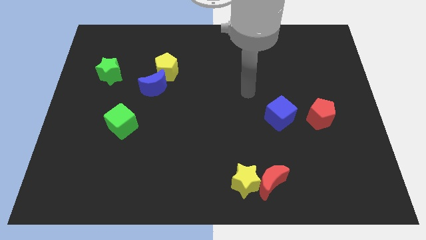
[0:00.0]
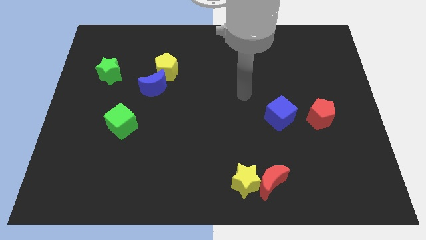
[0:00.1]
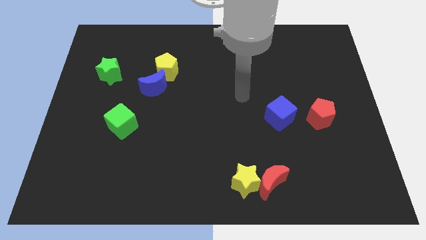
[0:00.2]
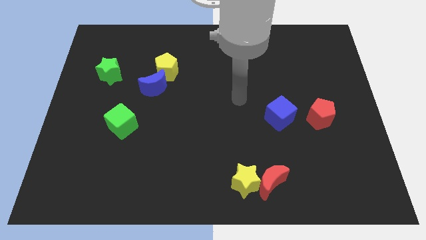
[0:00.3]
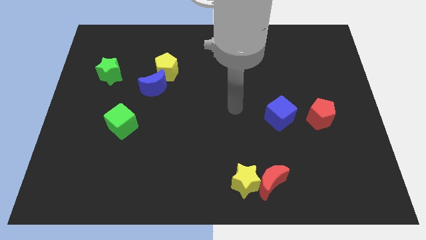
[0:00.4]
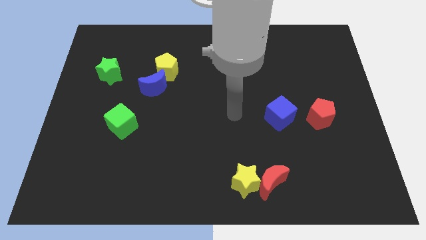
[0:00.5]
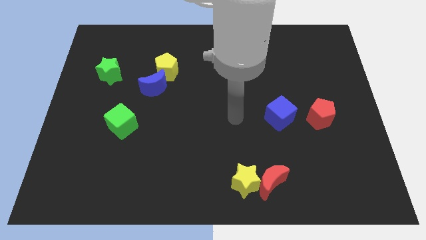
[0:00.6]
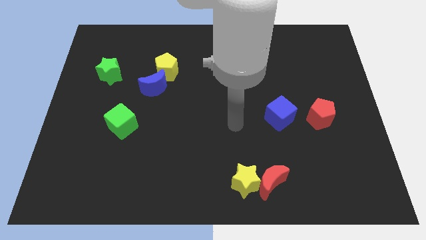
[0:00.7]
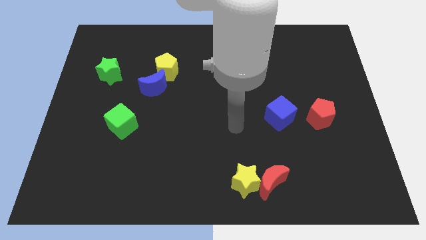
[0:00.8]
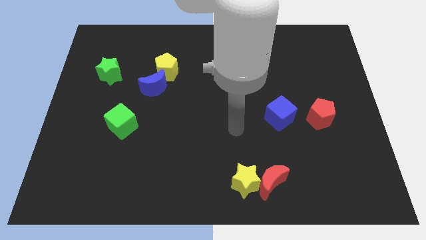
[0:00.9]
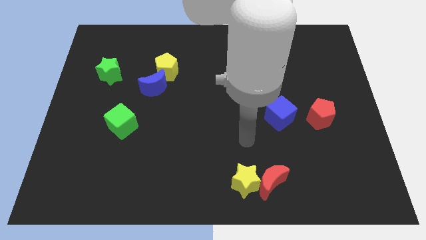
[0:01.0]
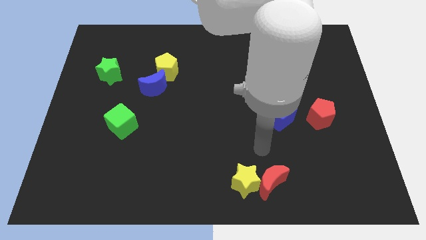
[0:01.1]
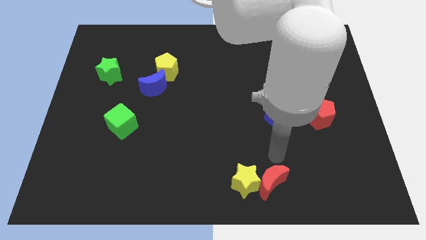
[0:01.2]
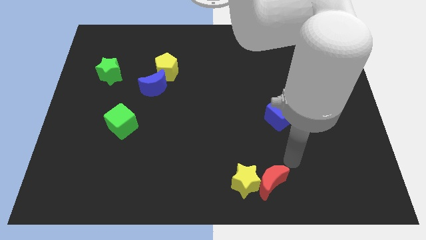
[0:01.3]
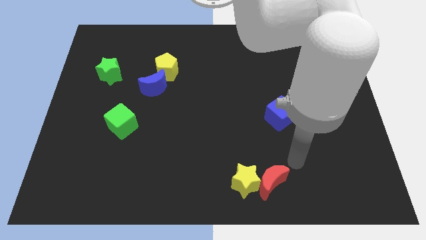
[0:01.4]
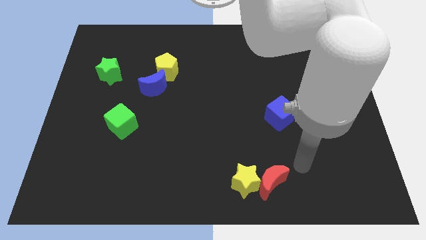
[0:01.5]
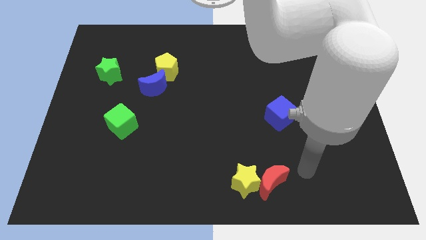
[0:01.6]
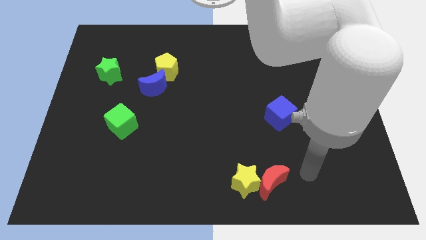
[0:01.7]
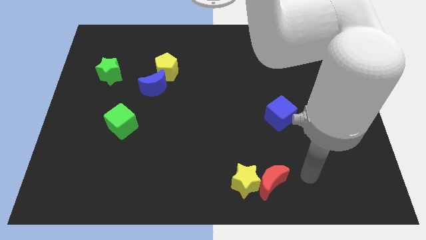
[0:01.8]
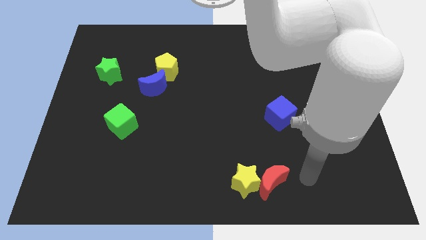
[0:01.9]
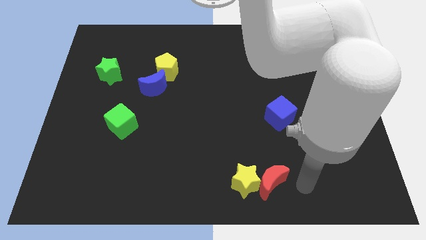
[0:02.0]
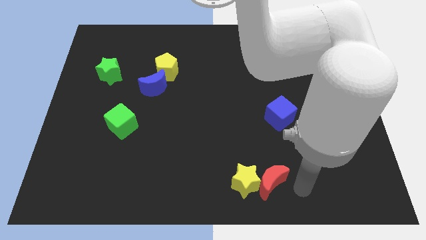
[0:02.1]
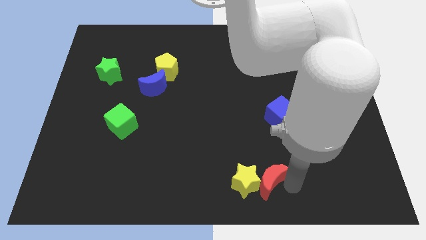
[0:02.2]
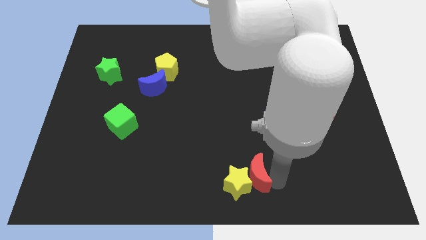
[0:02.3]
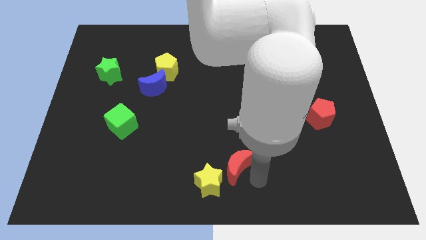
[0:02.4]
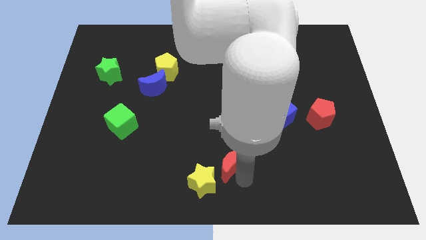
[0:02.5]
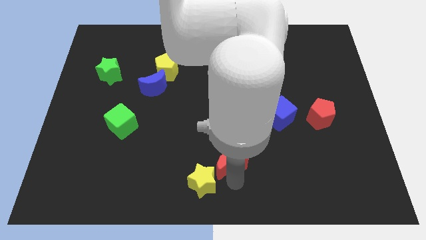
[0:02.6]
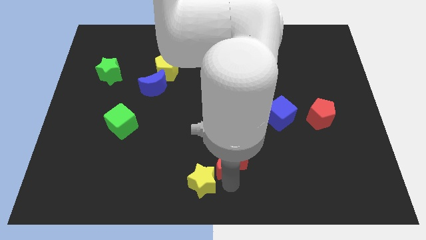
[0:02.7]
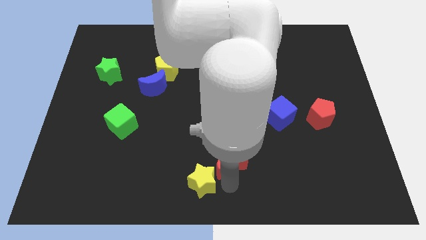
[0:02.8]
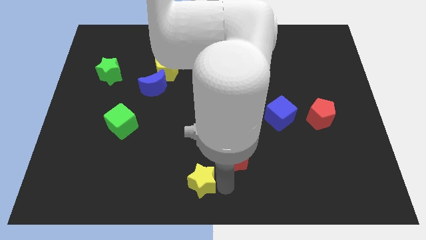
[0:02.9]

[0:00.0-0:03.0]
push the yellow star with red moon towards the left side

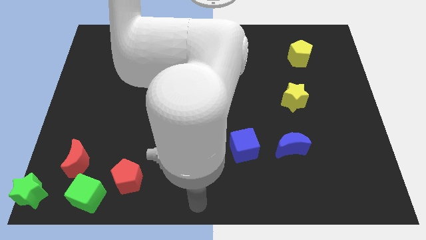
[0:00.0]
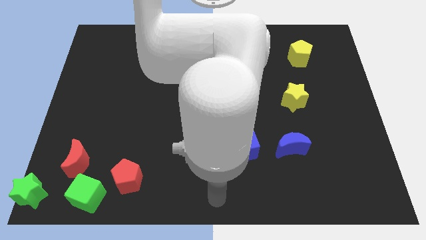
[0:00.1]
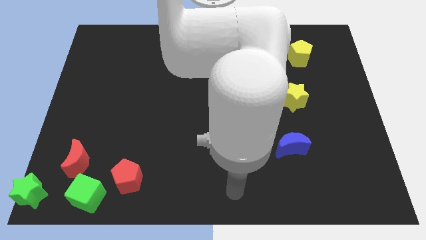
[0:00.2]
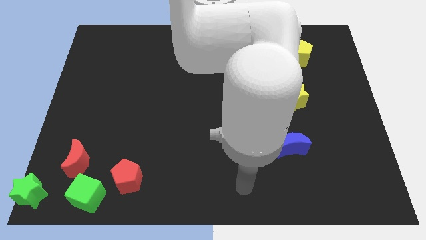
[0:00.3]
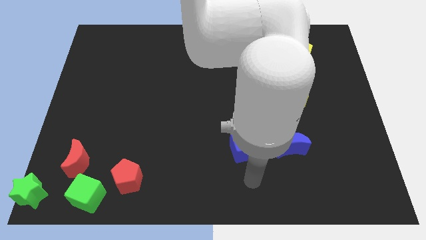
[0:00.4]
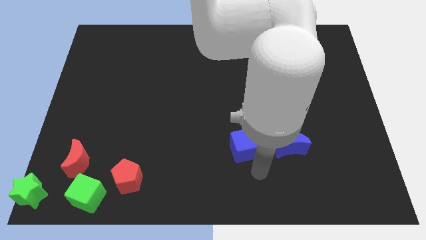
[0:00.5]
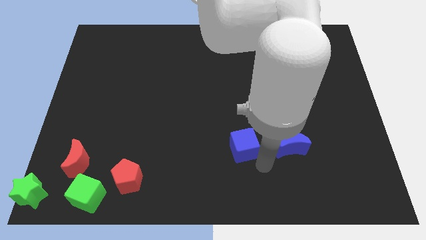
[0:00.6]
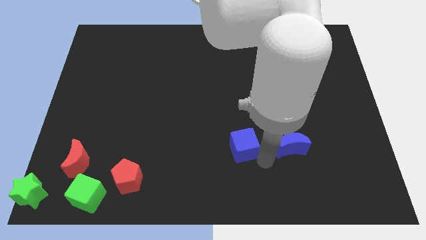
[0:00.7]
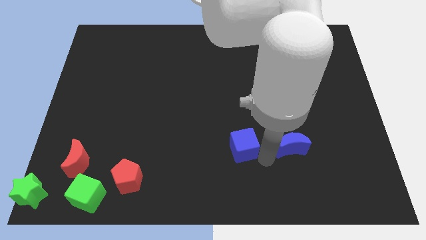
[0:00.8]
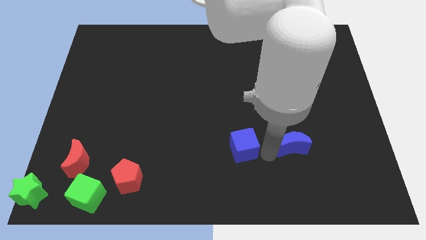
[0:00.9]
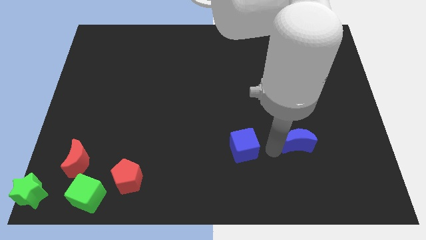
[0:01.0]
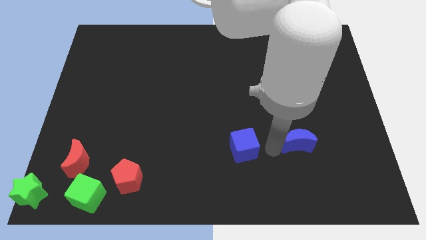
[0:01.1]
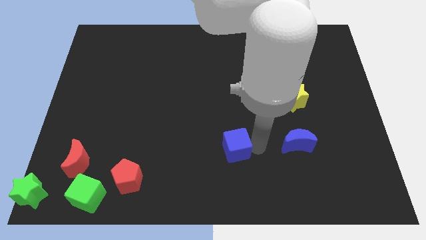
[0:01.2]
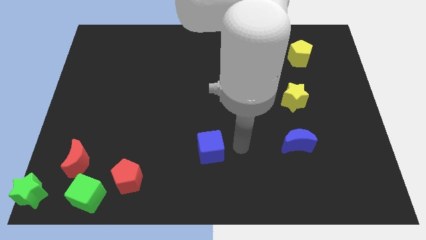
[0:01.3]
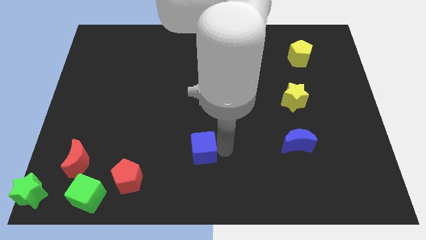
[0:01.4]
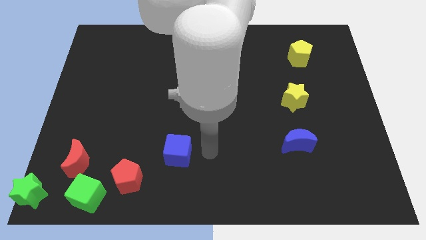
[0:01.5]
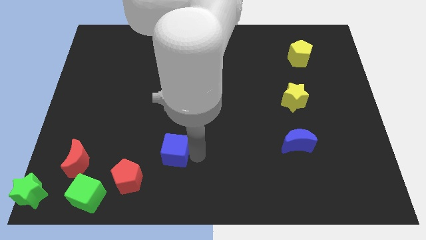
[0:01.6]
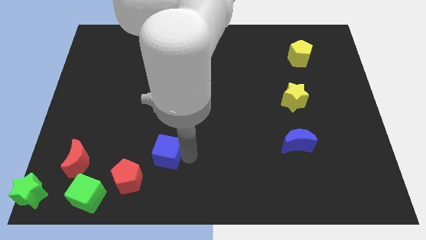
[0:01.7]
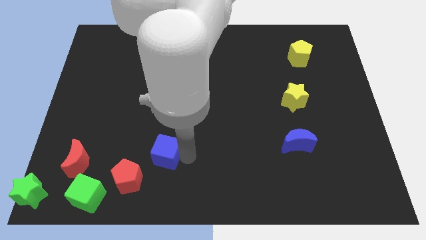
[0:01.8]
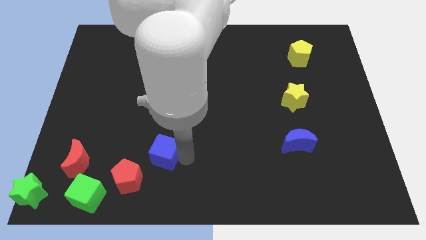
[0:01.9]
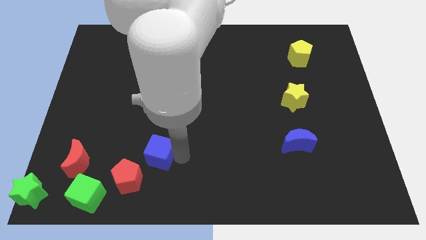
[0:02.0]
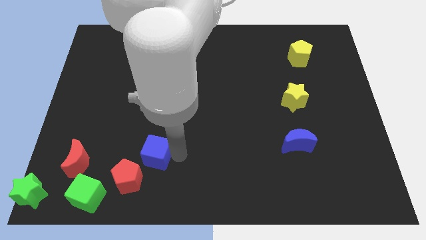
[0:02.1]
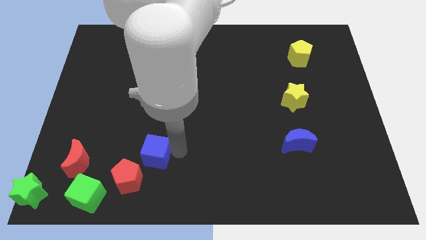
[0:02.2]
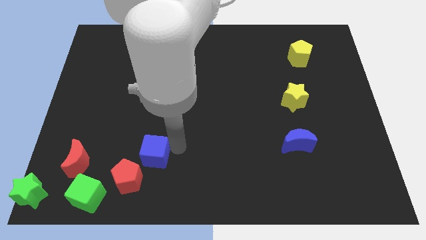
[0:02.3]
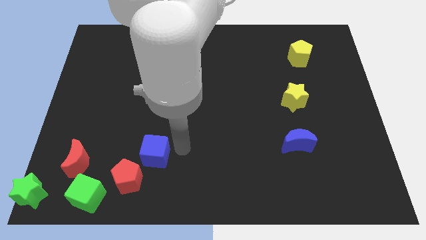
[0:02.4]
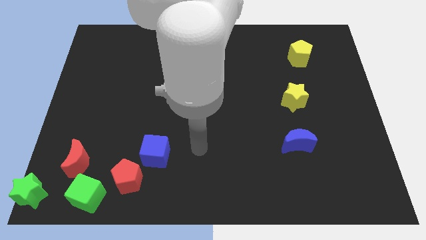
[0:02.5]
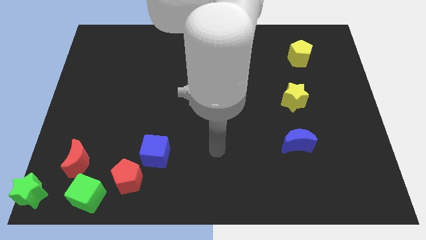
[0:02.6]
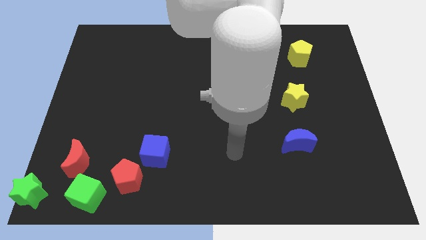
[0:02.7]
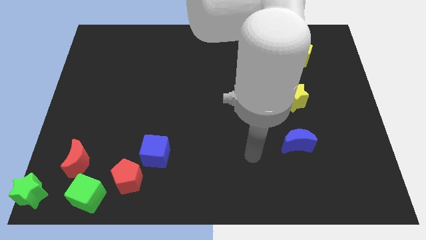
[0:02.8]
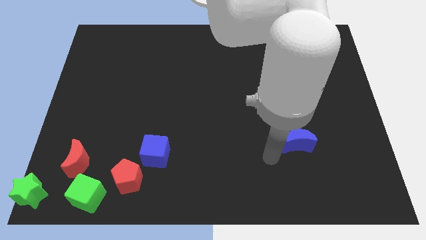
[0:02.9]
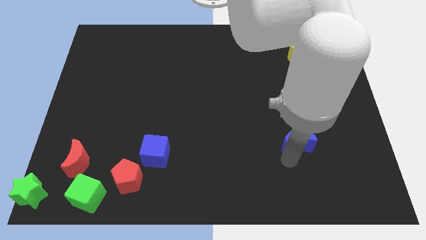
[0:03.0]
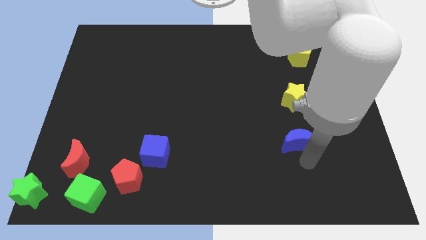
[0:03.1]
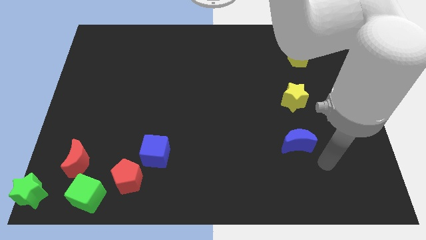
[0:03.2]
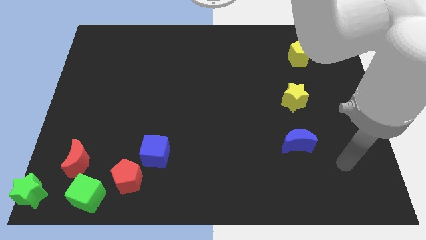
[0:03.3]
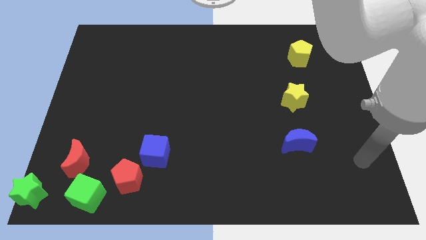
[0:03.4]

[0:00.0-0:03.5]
move the blue cube away from the blue moon

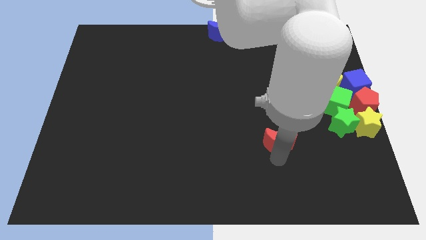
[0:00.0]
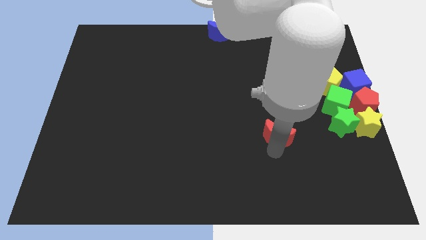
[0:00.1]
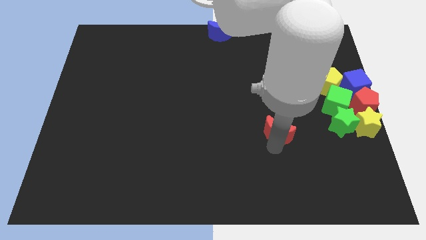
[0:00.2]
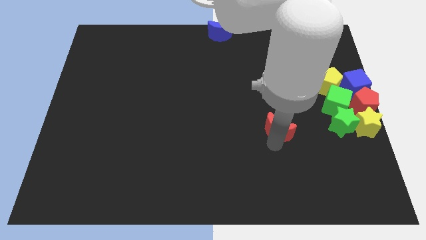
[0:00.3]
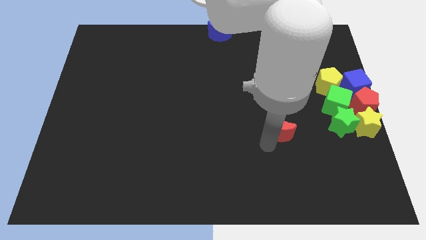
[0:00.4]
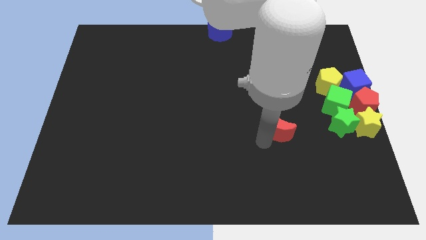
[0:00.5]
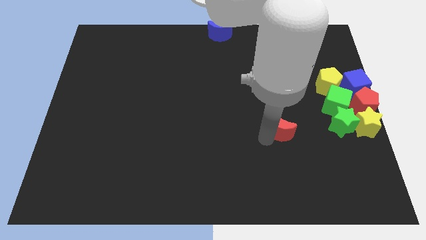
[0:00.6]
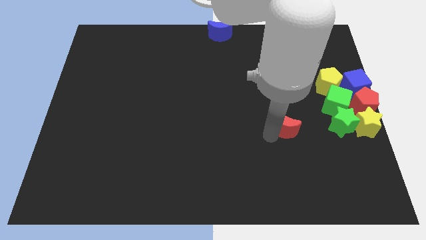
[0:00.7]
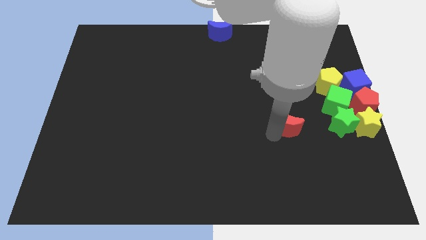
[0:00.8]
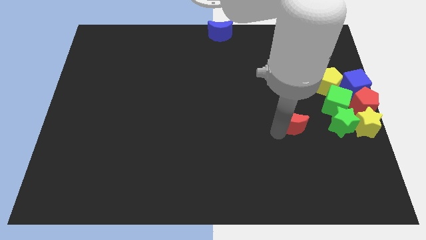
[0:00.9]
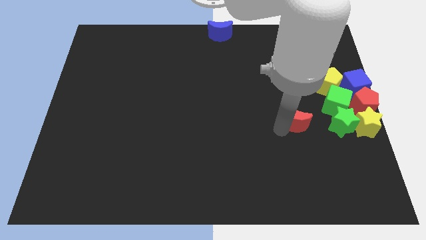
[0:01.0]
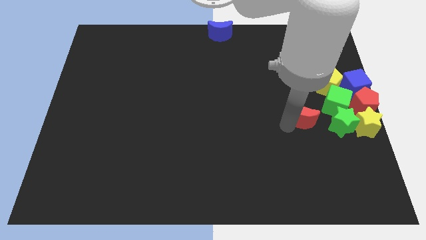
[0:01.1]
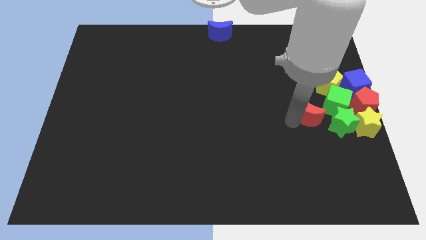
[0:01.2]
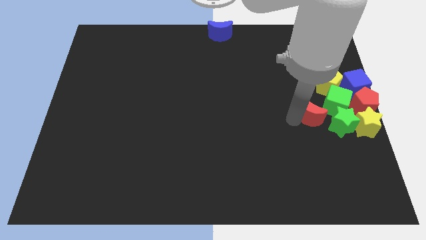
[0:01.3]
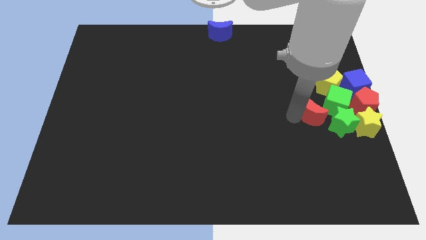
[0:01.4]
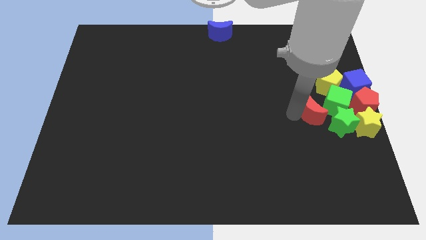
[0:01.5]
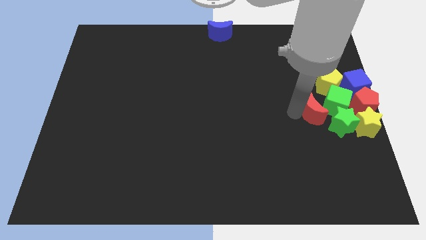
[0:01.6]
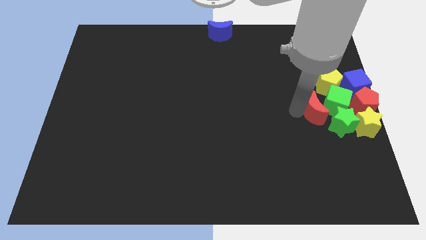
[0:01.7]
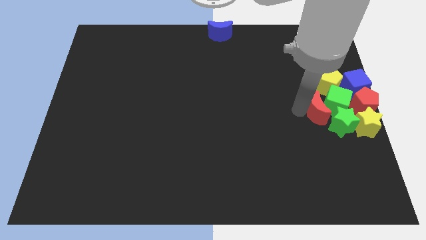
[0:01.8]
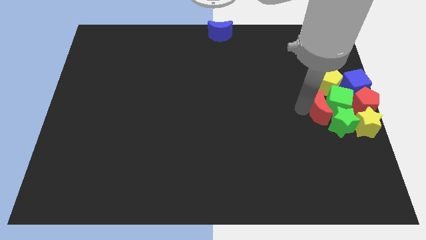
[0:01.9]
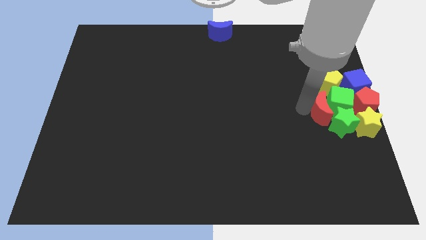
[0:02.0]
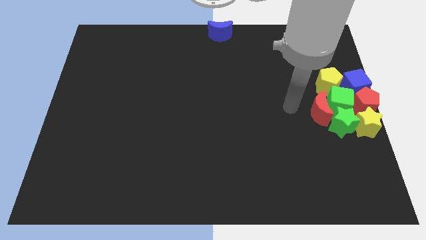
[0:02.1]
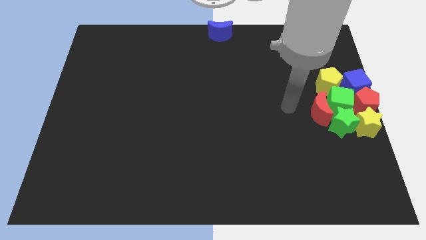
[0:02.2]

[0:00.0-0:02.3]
place red pentagon opposite to green cube

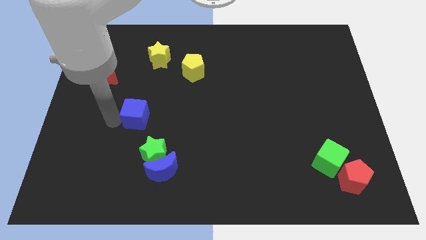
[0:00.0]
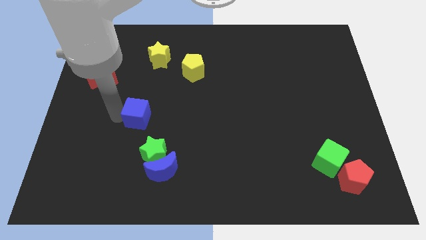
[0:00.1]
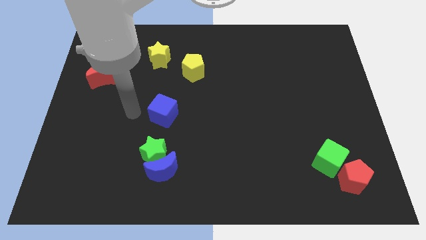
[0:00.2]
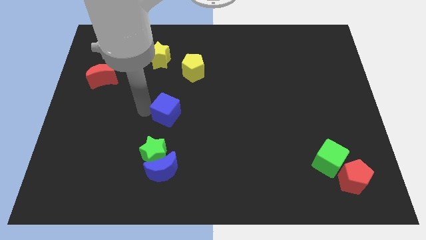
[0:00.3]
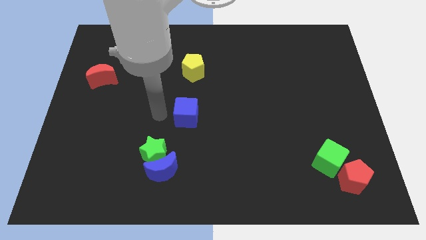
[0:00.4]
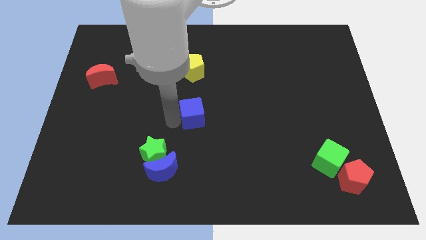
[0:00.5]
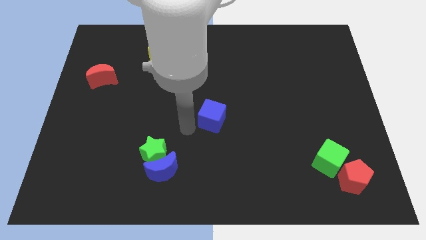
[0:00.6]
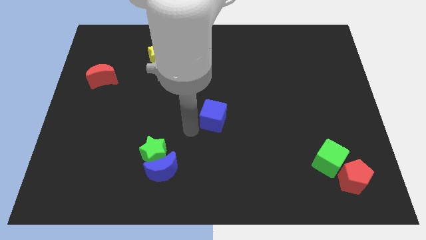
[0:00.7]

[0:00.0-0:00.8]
move the blue cube to the center of the board
